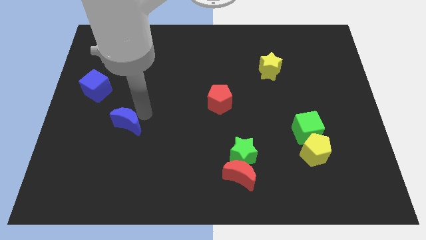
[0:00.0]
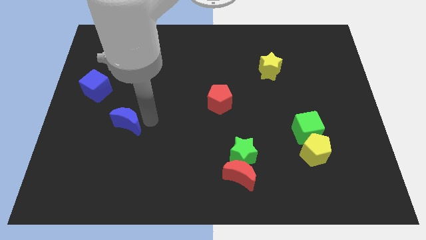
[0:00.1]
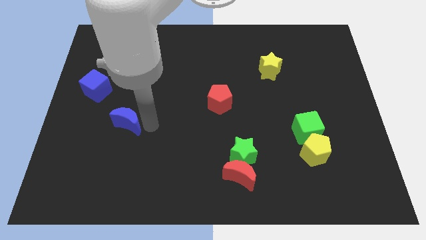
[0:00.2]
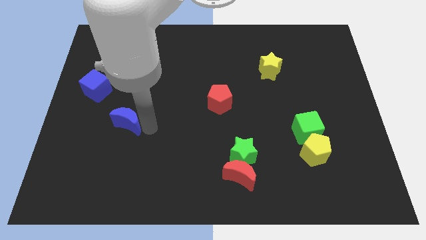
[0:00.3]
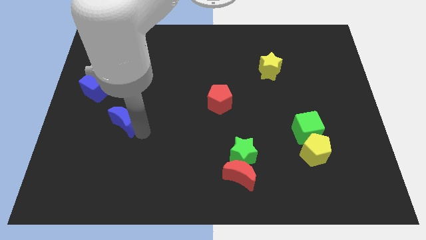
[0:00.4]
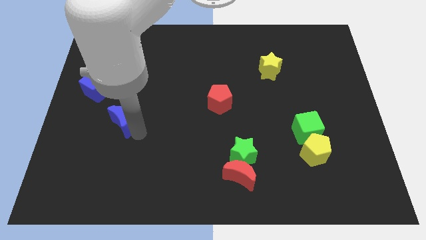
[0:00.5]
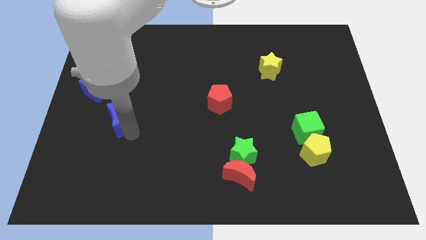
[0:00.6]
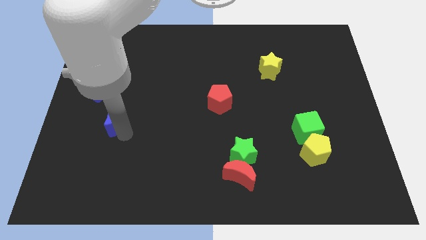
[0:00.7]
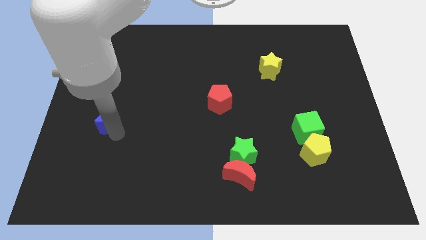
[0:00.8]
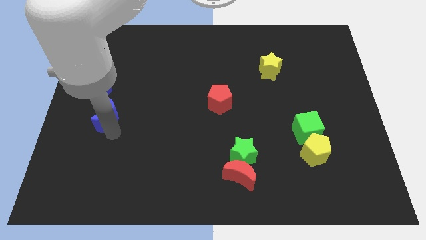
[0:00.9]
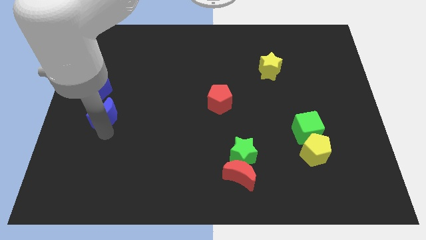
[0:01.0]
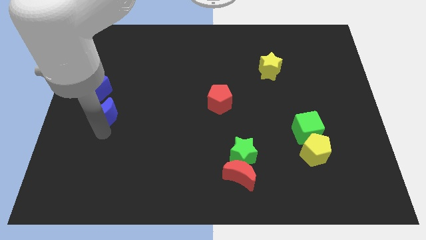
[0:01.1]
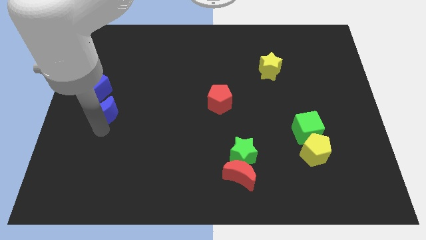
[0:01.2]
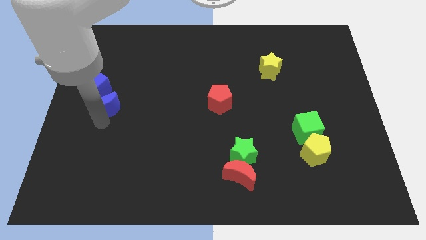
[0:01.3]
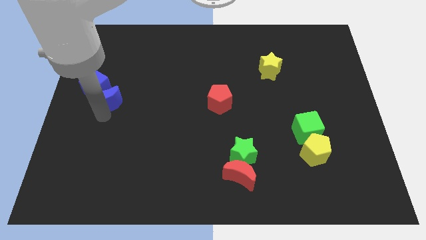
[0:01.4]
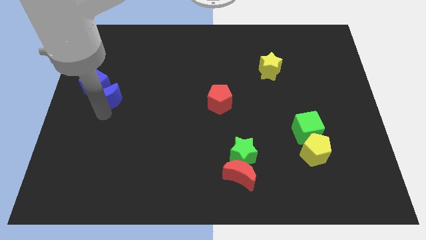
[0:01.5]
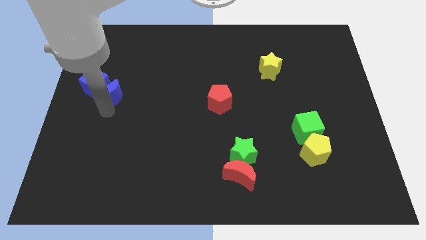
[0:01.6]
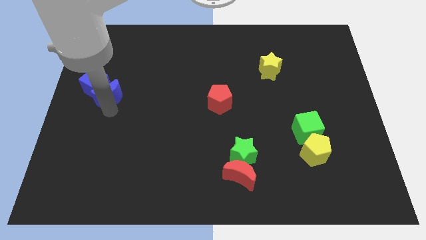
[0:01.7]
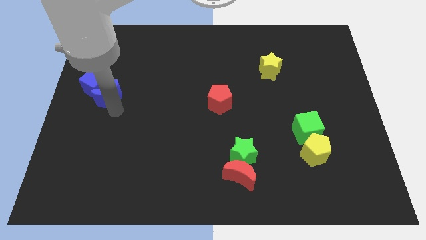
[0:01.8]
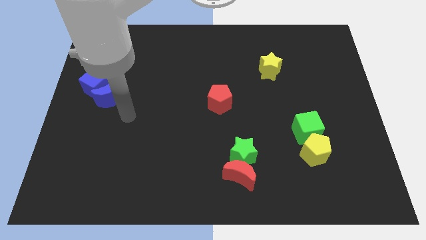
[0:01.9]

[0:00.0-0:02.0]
move the blue crescent into the blue cube towards left center

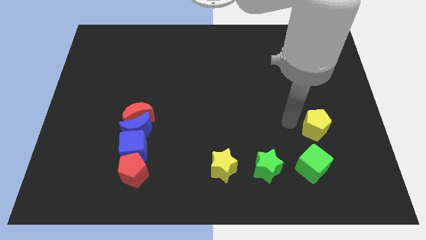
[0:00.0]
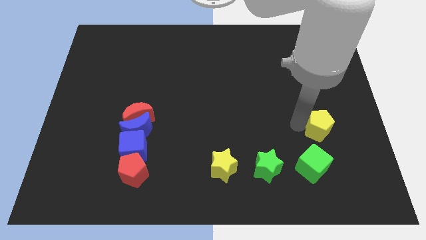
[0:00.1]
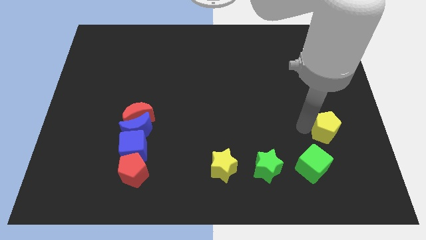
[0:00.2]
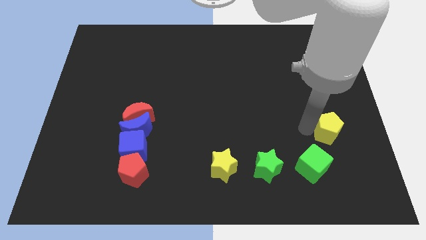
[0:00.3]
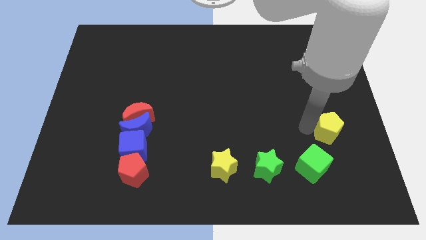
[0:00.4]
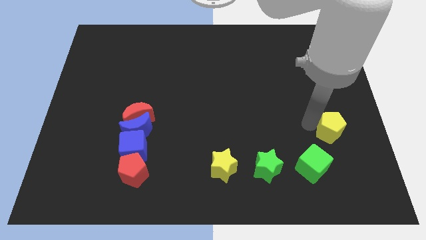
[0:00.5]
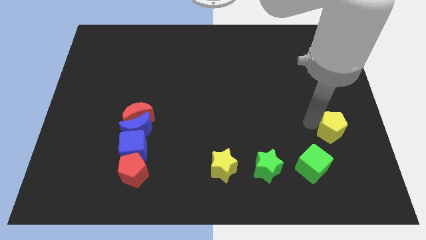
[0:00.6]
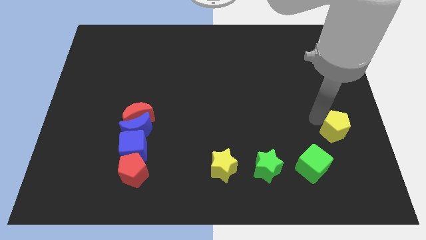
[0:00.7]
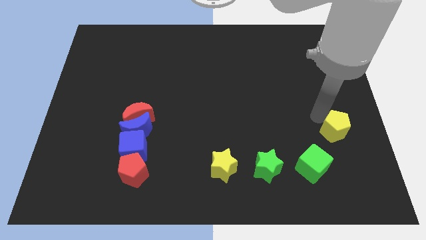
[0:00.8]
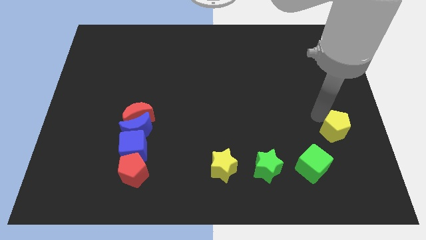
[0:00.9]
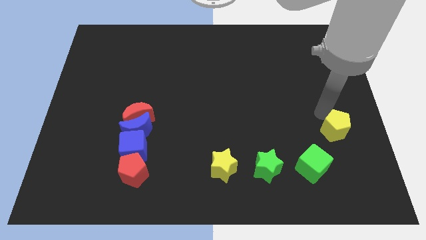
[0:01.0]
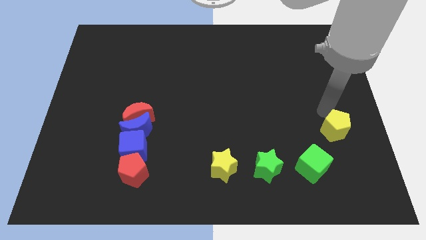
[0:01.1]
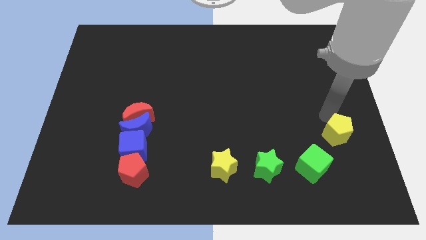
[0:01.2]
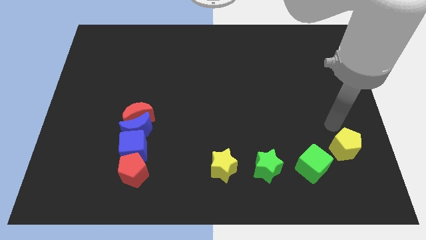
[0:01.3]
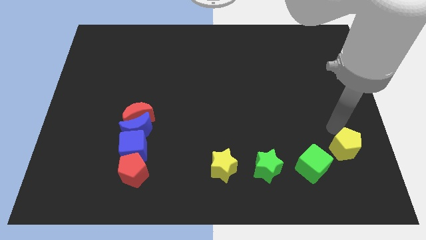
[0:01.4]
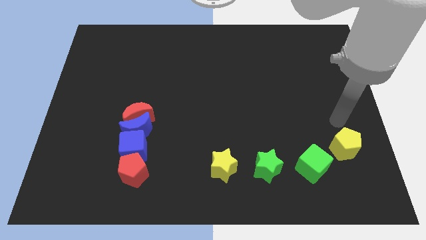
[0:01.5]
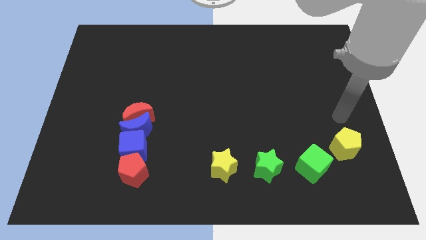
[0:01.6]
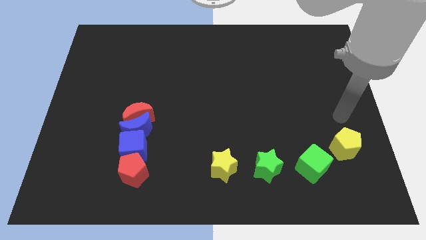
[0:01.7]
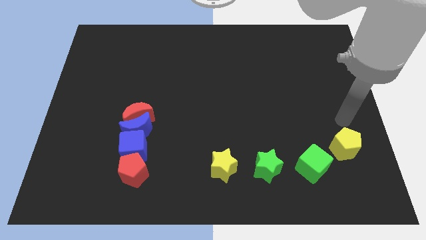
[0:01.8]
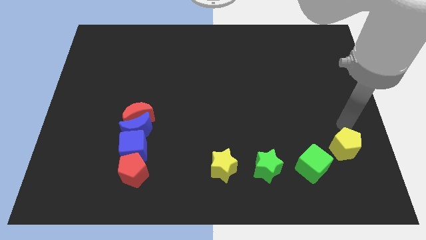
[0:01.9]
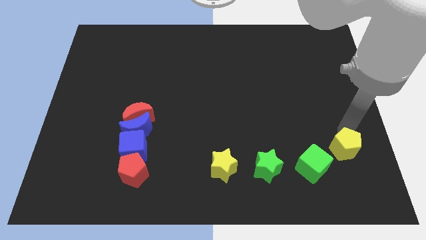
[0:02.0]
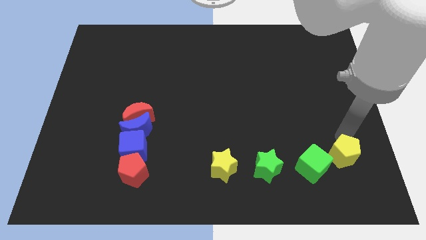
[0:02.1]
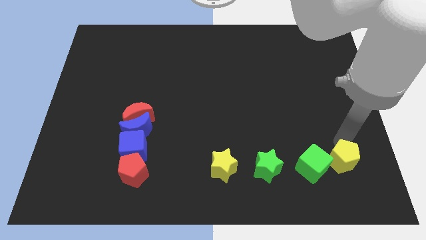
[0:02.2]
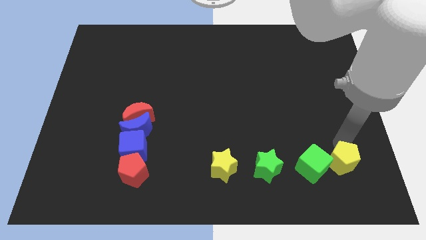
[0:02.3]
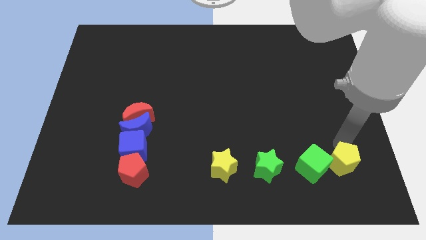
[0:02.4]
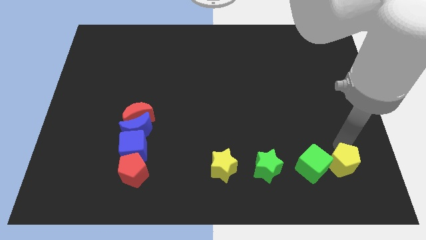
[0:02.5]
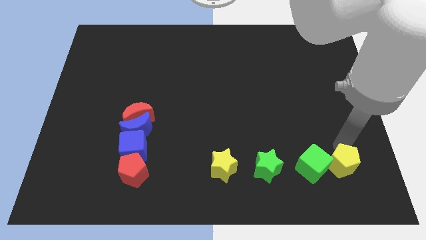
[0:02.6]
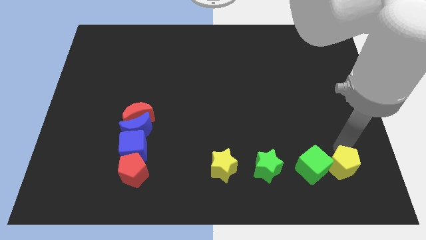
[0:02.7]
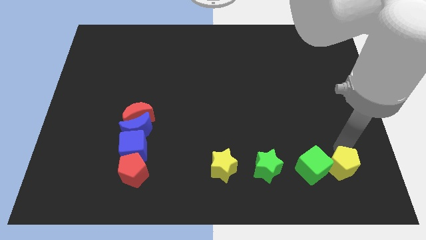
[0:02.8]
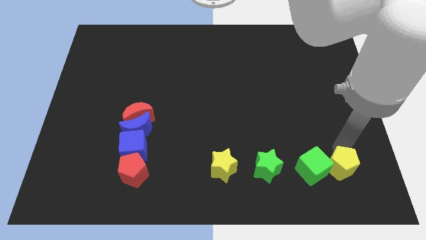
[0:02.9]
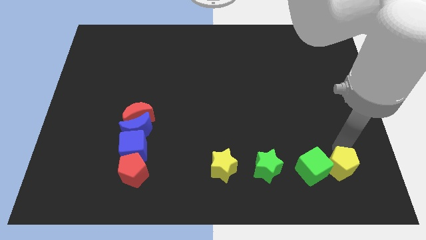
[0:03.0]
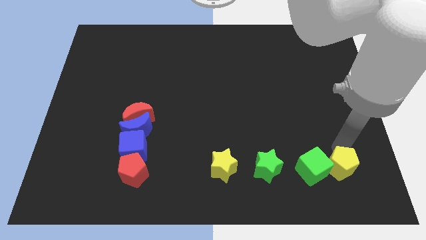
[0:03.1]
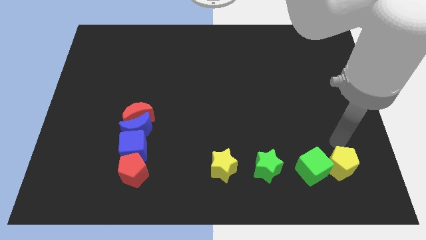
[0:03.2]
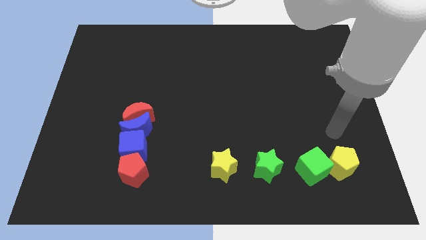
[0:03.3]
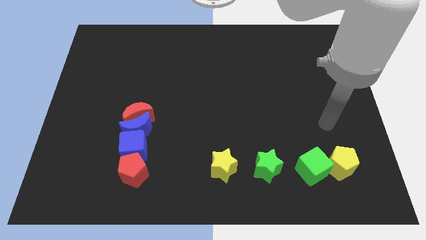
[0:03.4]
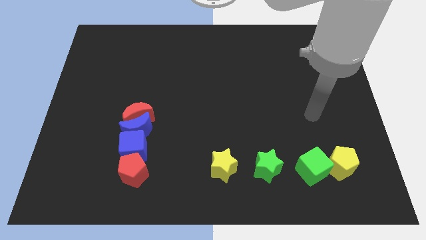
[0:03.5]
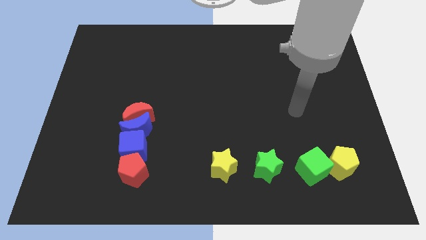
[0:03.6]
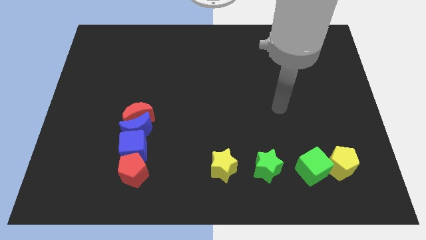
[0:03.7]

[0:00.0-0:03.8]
place the yellow pentagon right to green cube

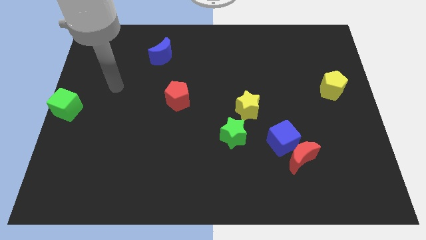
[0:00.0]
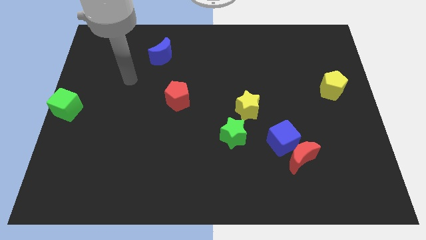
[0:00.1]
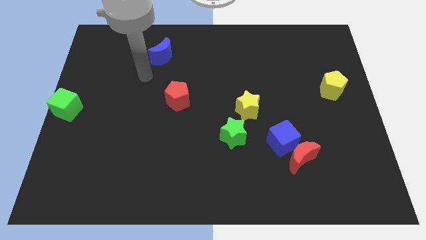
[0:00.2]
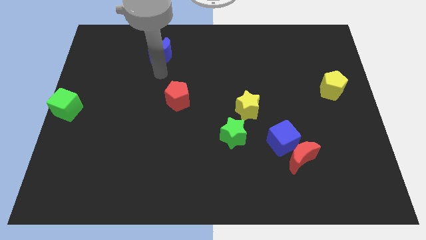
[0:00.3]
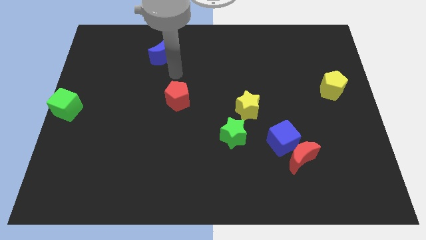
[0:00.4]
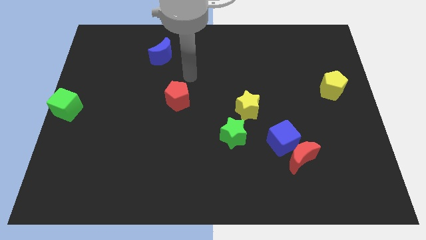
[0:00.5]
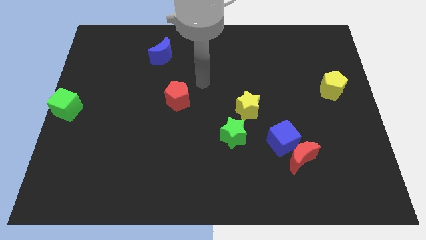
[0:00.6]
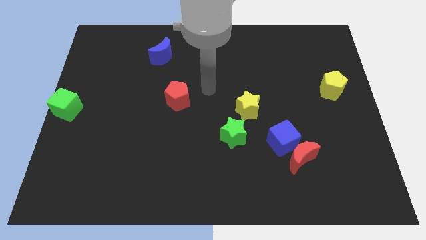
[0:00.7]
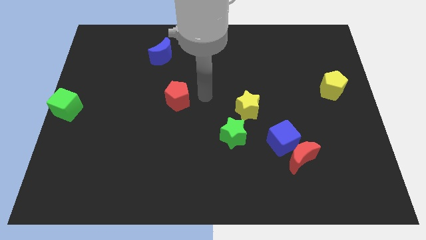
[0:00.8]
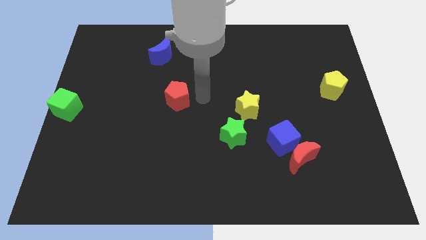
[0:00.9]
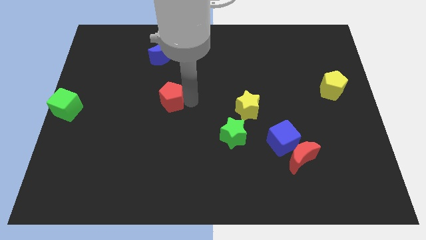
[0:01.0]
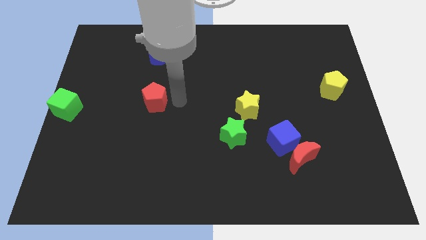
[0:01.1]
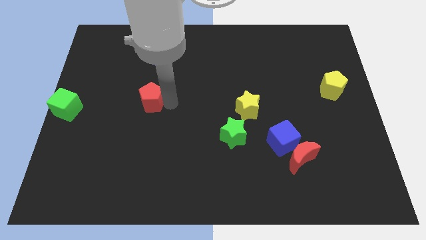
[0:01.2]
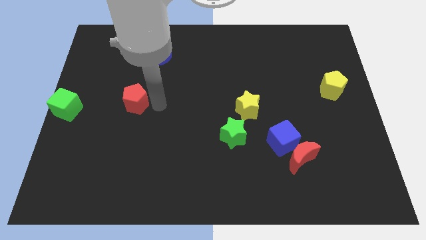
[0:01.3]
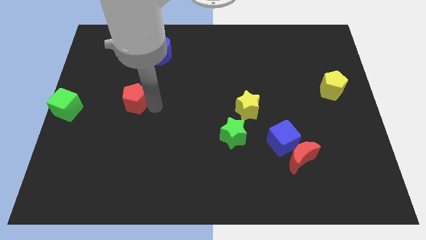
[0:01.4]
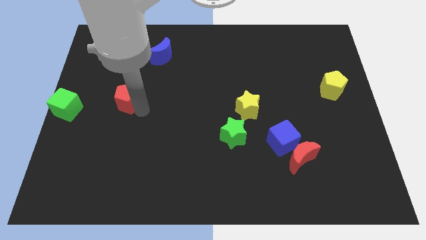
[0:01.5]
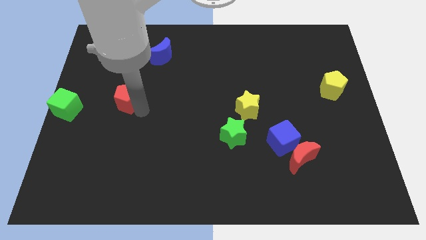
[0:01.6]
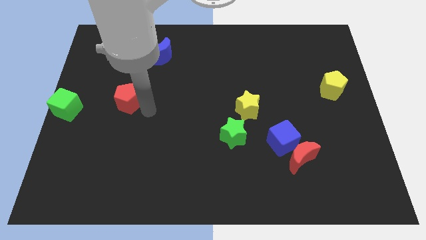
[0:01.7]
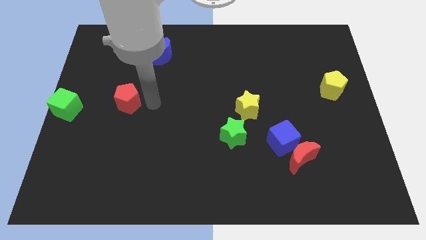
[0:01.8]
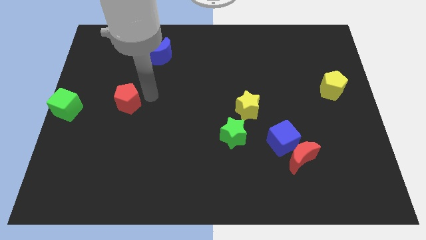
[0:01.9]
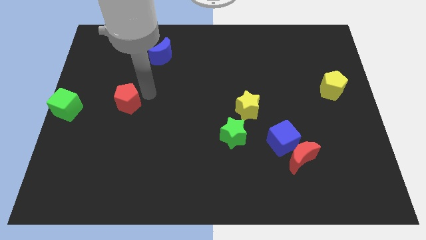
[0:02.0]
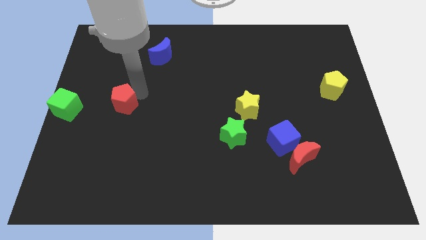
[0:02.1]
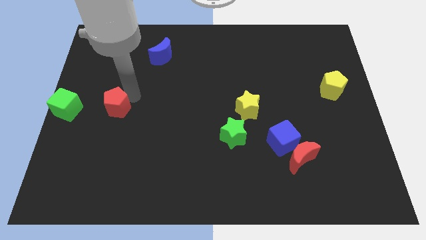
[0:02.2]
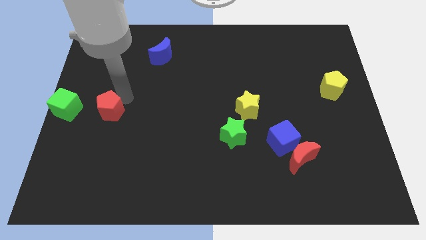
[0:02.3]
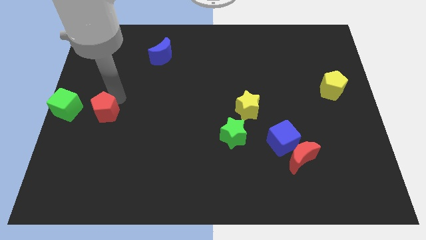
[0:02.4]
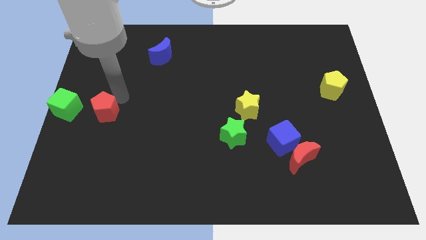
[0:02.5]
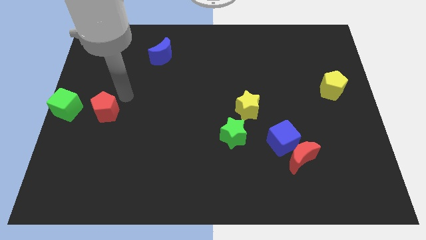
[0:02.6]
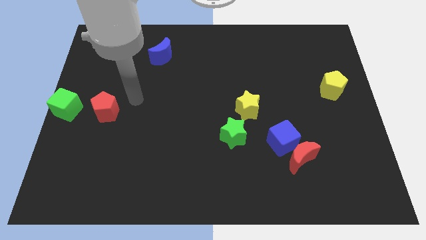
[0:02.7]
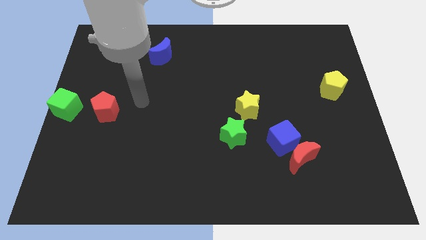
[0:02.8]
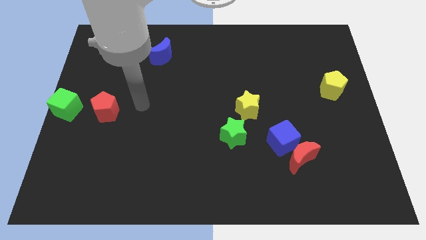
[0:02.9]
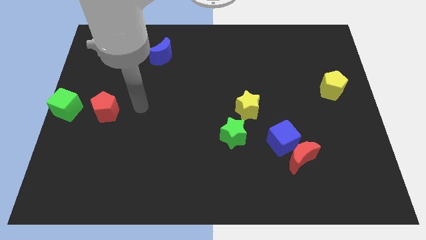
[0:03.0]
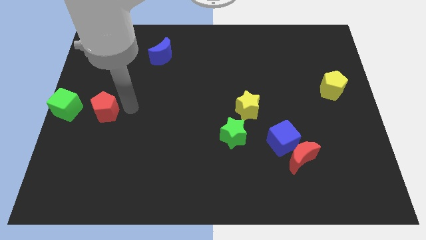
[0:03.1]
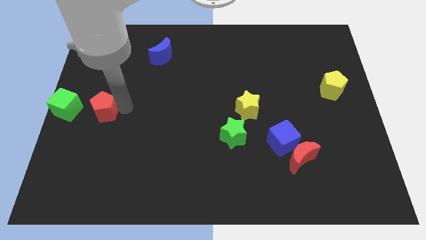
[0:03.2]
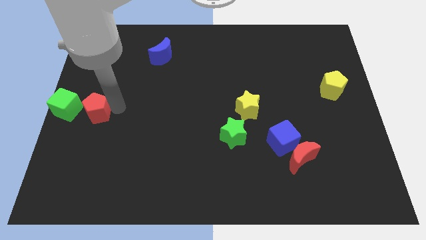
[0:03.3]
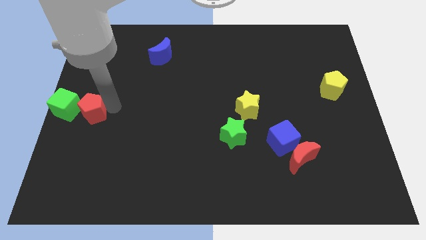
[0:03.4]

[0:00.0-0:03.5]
move the red pentagon close to the green cube
